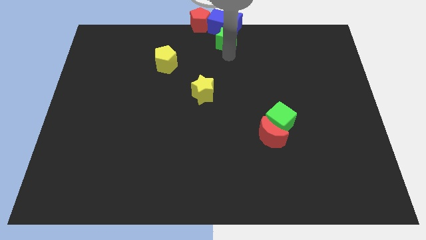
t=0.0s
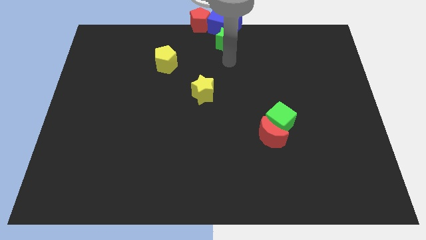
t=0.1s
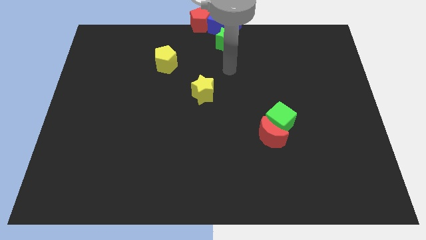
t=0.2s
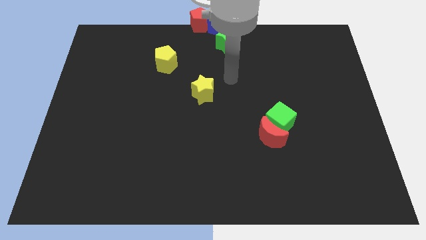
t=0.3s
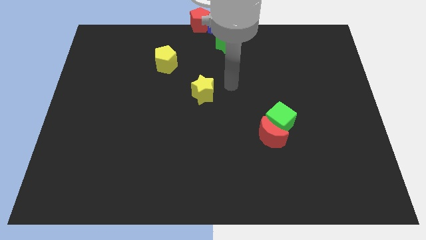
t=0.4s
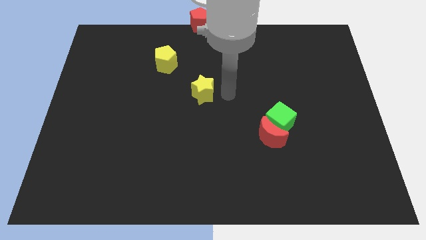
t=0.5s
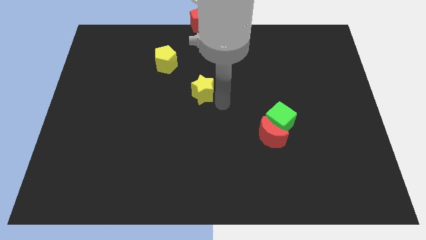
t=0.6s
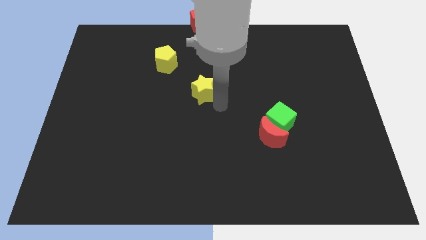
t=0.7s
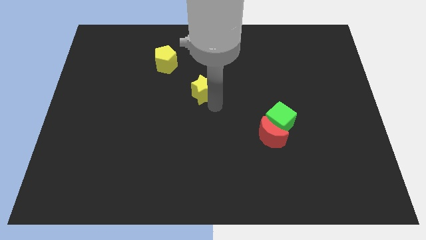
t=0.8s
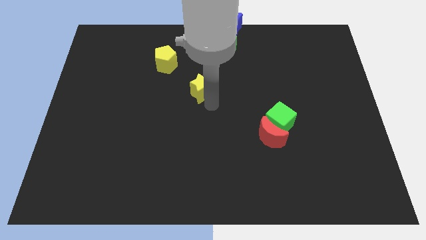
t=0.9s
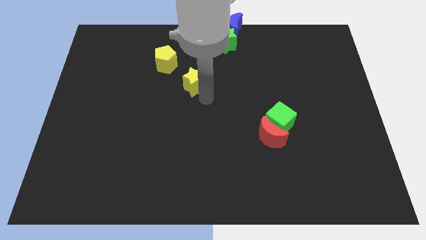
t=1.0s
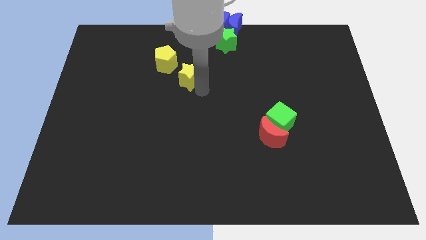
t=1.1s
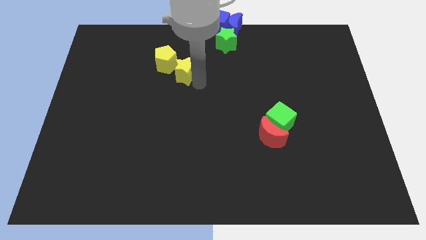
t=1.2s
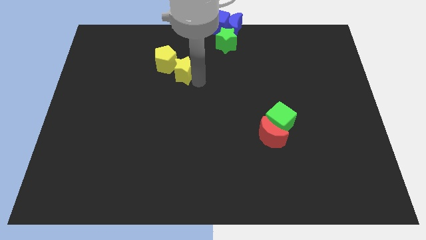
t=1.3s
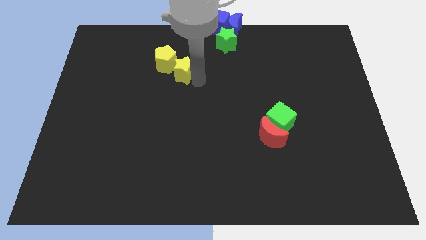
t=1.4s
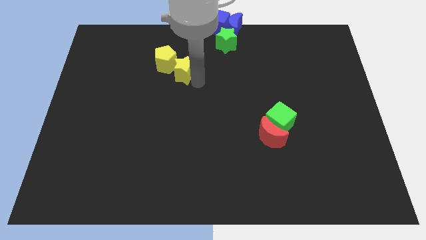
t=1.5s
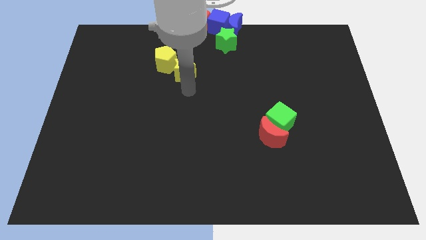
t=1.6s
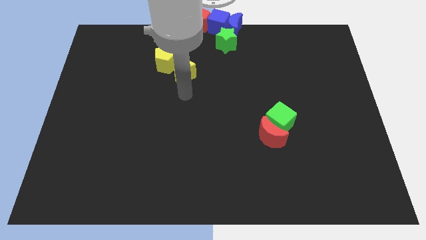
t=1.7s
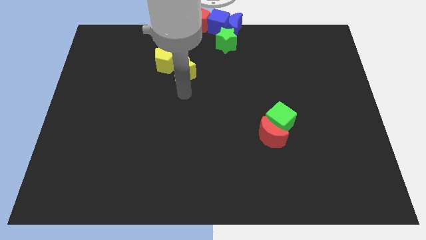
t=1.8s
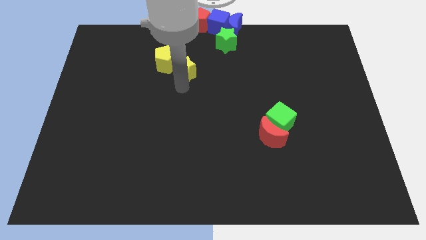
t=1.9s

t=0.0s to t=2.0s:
move the yellow star to the right of the yellow pentagon

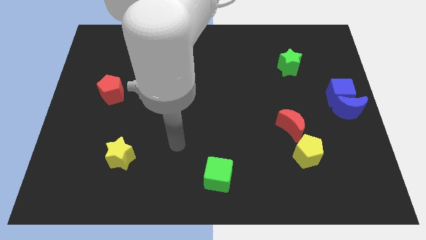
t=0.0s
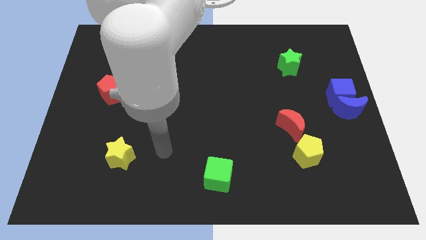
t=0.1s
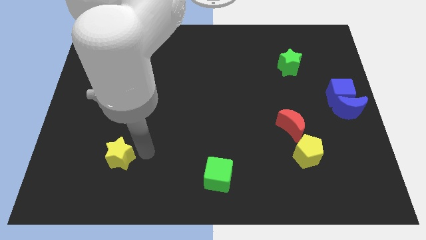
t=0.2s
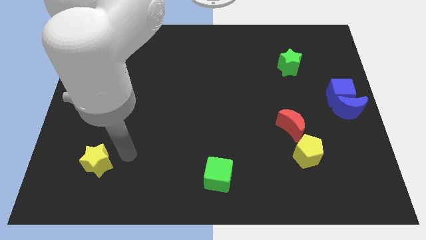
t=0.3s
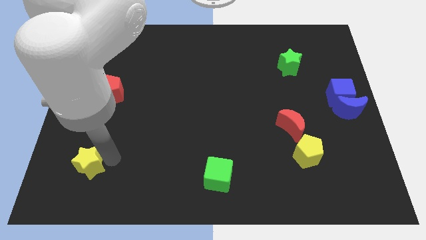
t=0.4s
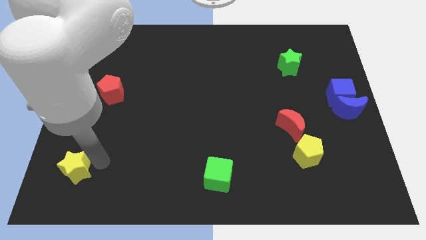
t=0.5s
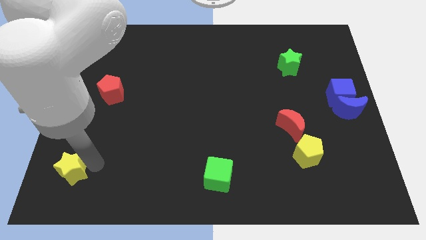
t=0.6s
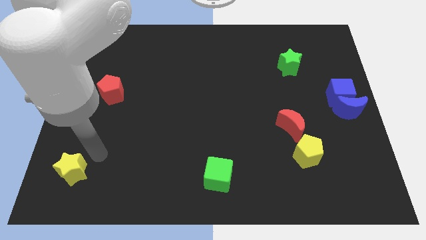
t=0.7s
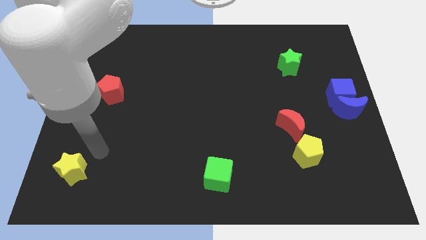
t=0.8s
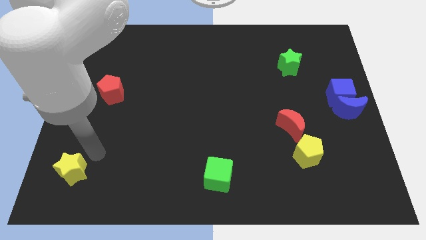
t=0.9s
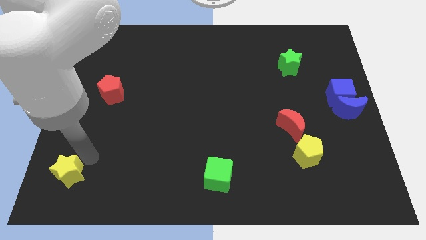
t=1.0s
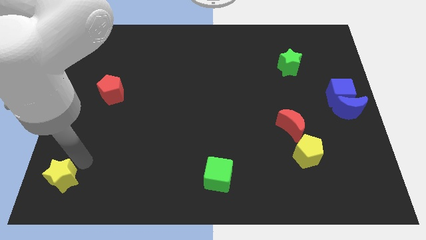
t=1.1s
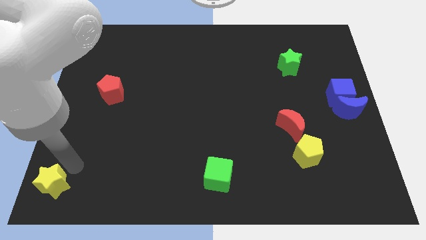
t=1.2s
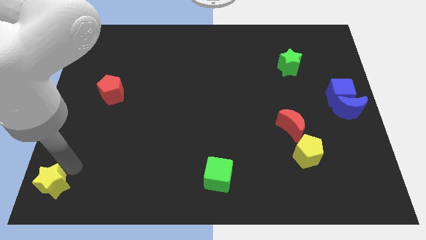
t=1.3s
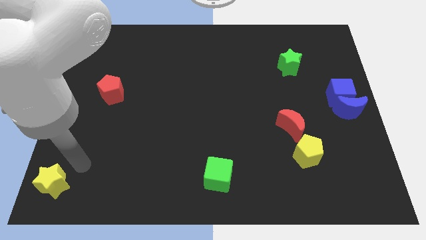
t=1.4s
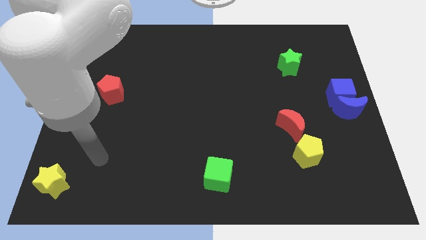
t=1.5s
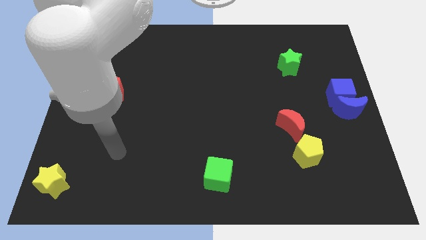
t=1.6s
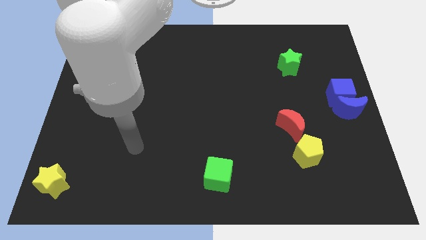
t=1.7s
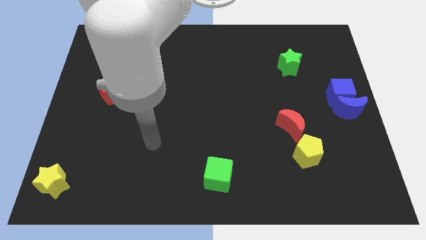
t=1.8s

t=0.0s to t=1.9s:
push yellow star to the bottom left

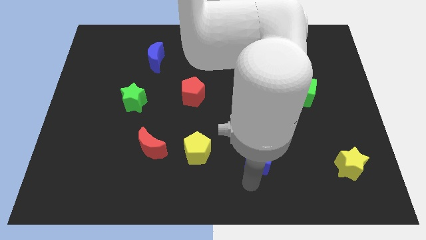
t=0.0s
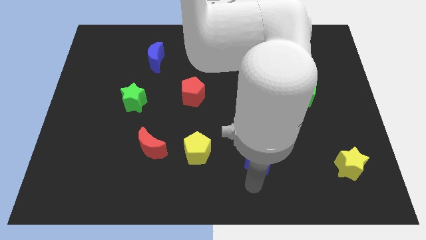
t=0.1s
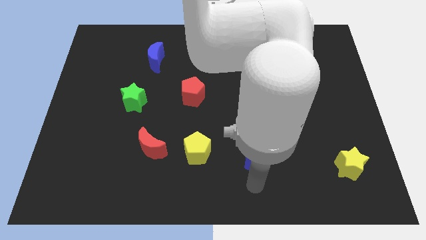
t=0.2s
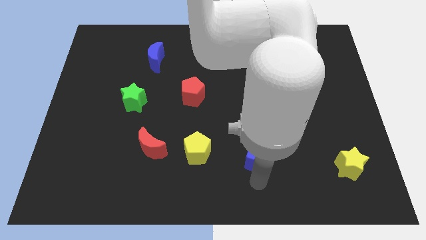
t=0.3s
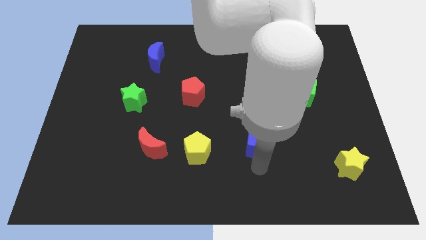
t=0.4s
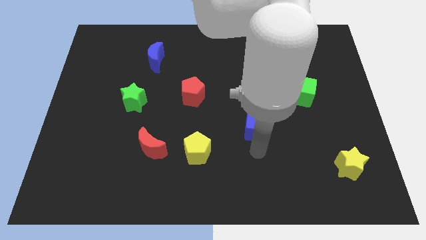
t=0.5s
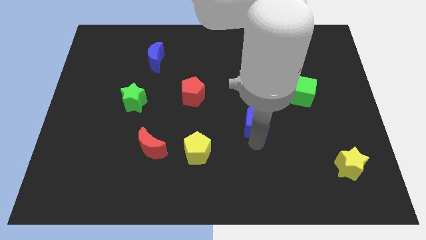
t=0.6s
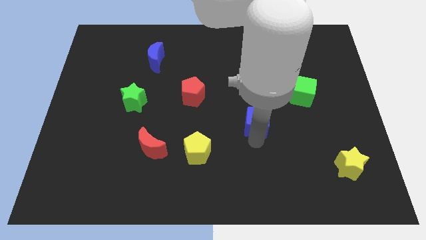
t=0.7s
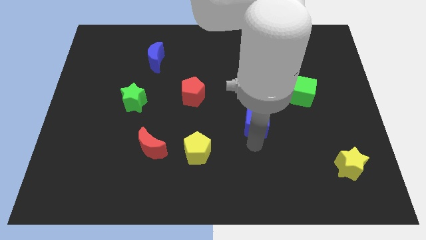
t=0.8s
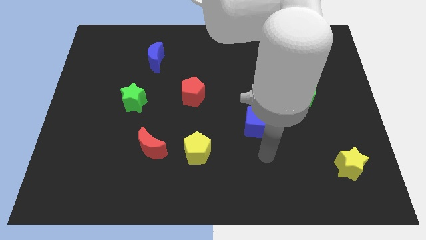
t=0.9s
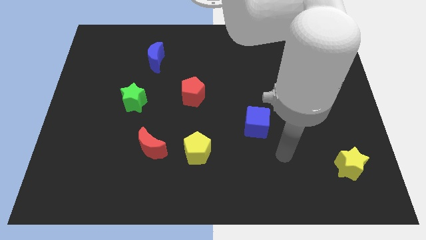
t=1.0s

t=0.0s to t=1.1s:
push blue cube slightly upwards

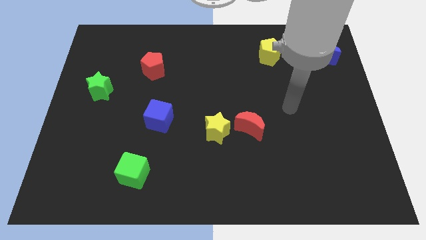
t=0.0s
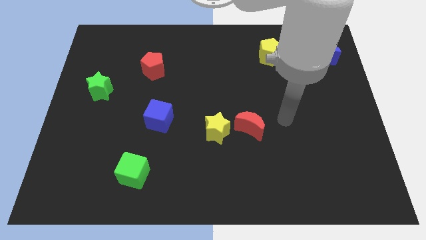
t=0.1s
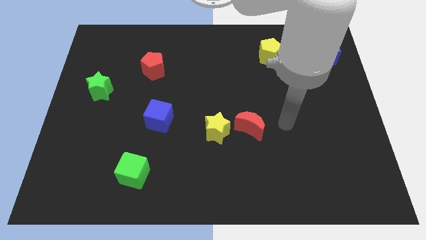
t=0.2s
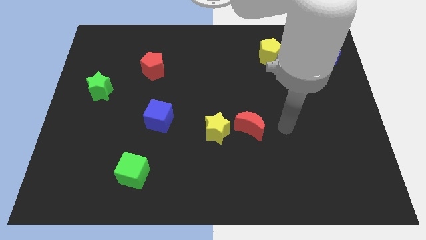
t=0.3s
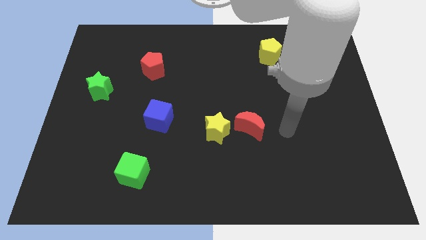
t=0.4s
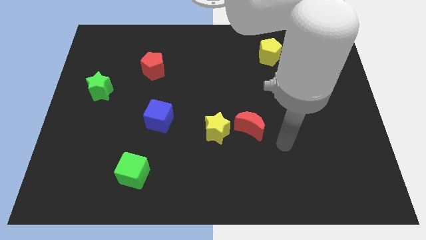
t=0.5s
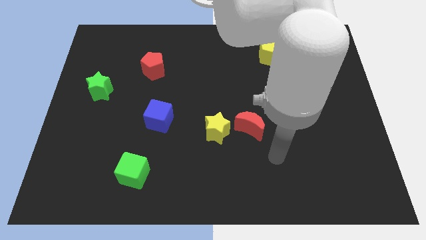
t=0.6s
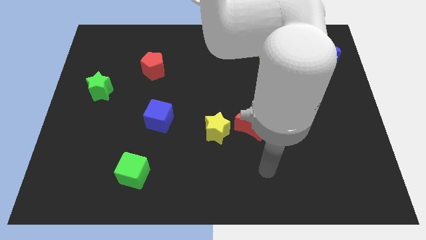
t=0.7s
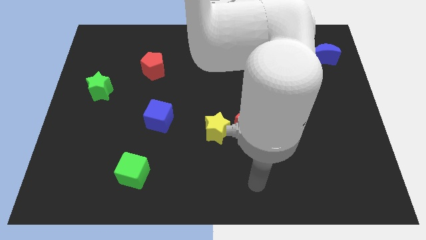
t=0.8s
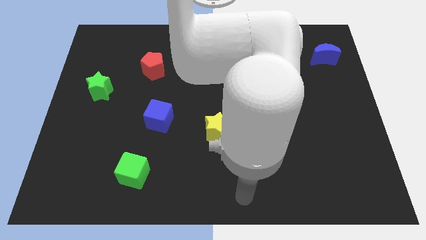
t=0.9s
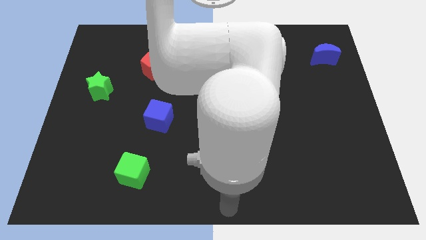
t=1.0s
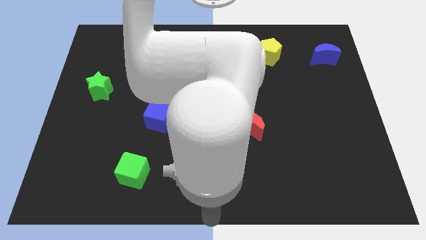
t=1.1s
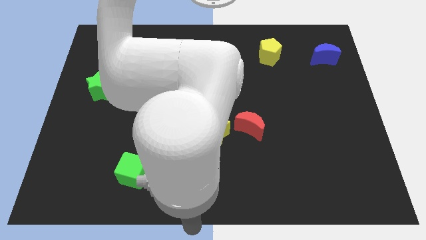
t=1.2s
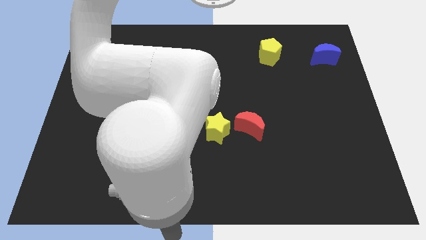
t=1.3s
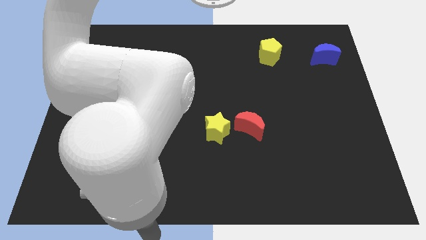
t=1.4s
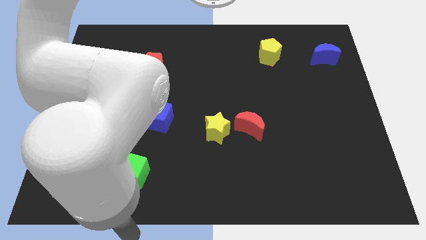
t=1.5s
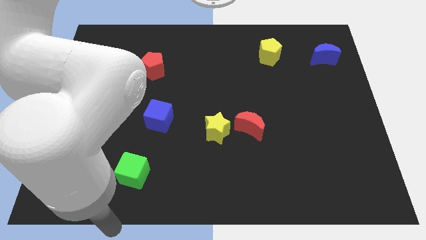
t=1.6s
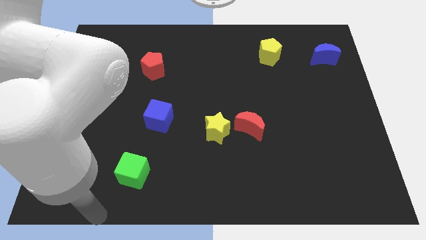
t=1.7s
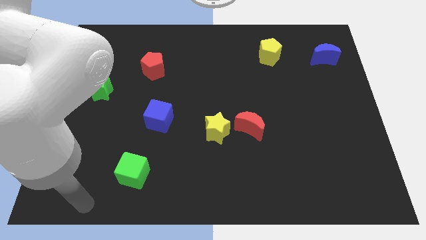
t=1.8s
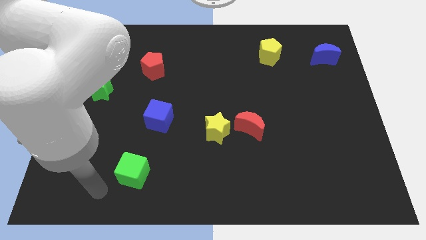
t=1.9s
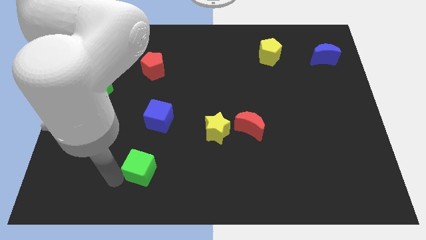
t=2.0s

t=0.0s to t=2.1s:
place the arm near the green cube

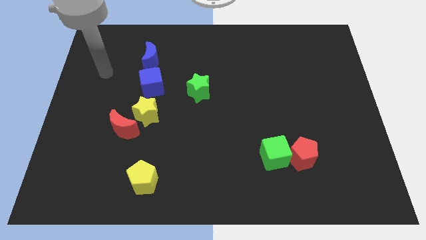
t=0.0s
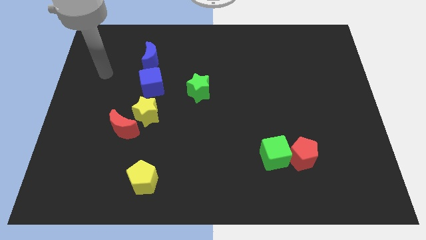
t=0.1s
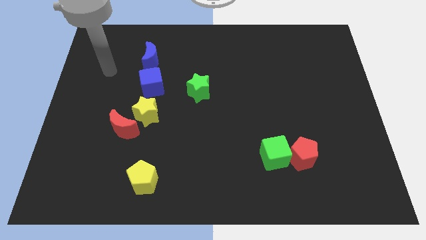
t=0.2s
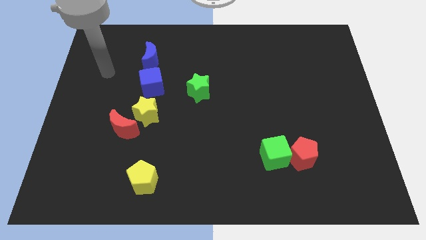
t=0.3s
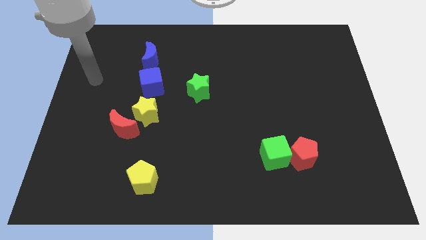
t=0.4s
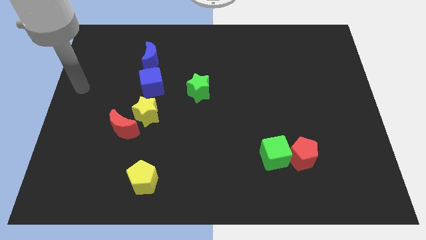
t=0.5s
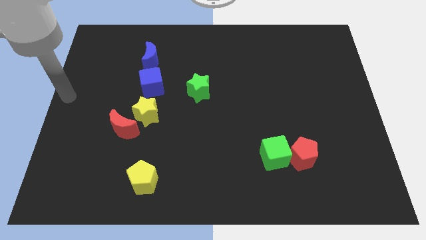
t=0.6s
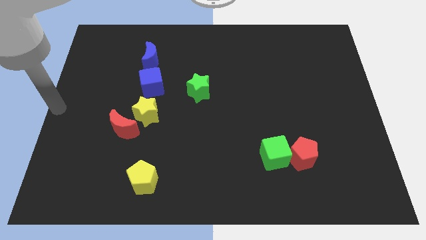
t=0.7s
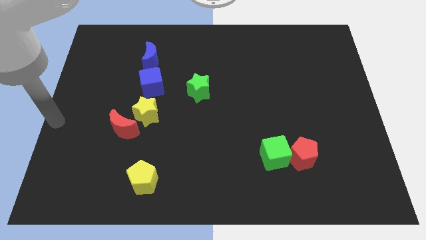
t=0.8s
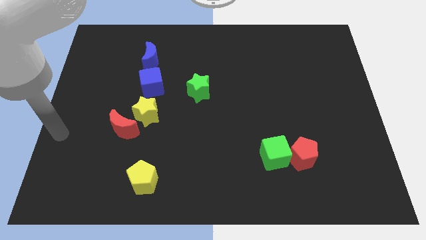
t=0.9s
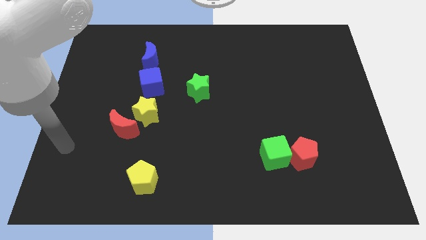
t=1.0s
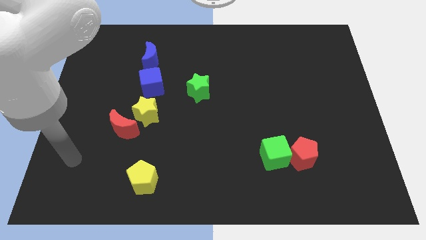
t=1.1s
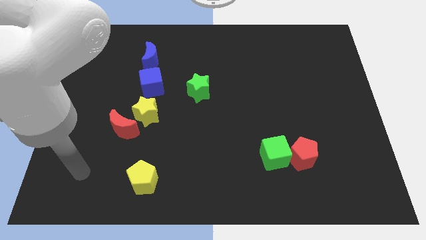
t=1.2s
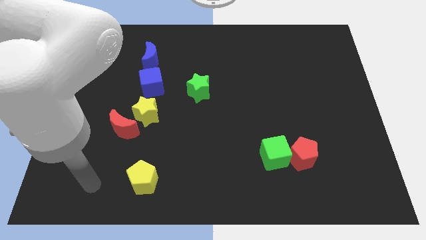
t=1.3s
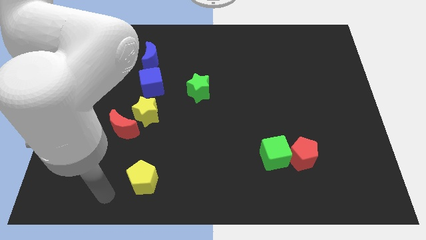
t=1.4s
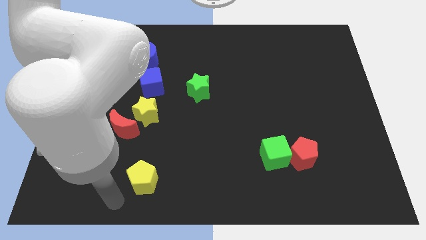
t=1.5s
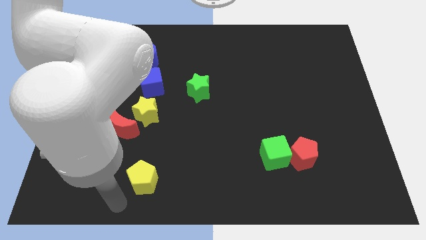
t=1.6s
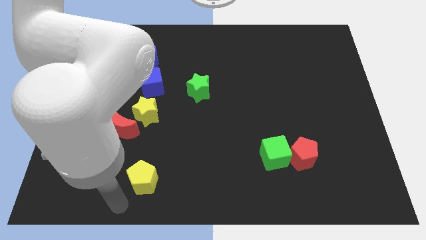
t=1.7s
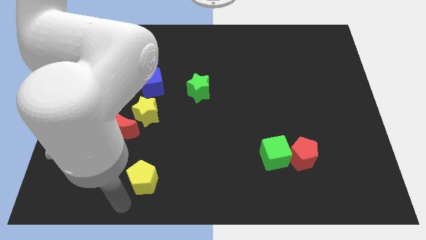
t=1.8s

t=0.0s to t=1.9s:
move your arm towards the yellow pentagon
